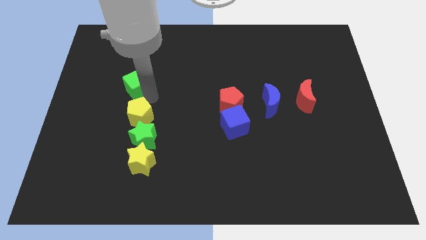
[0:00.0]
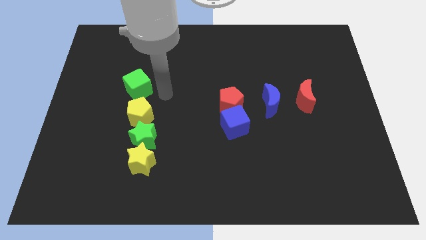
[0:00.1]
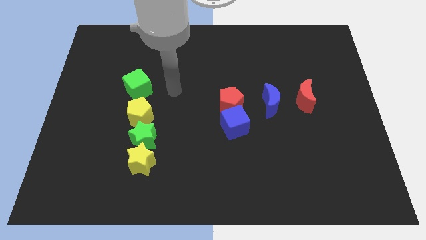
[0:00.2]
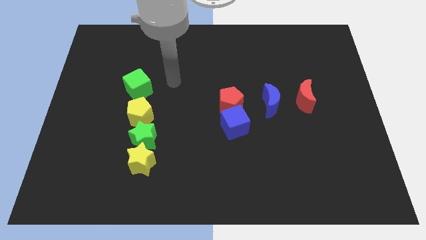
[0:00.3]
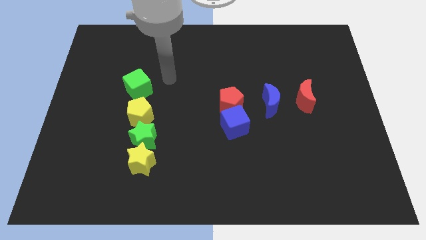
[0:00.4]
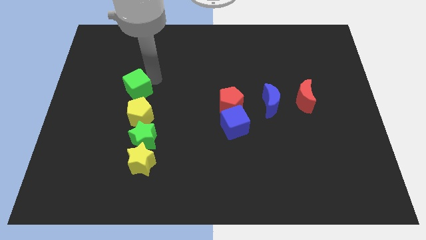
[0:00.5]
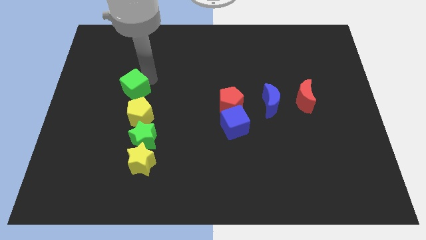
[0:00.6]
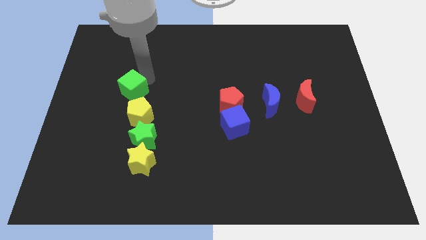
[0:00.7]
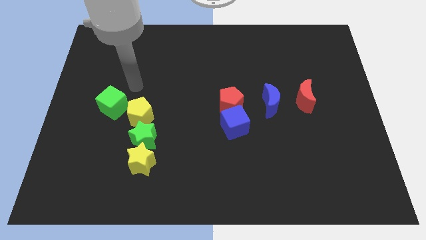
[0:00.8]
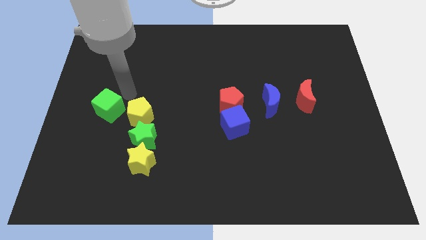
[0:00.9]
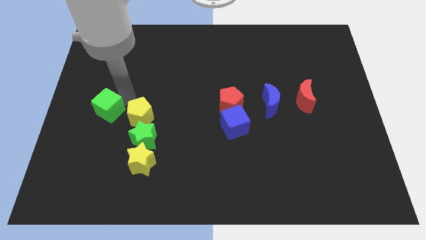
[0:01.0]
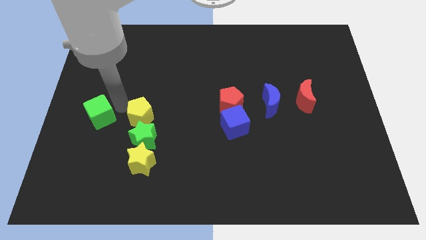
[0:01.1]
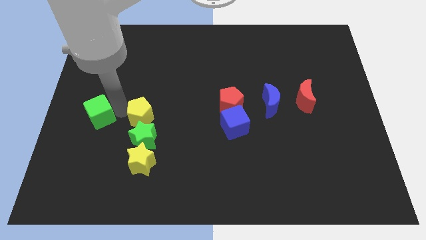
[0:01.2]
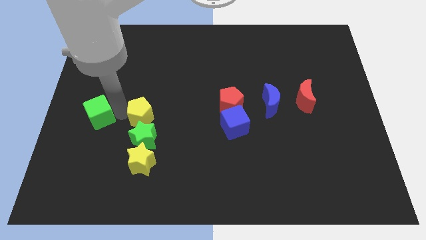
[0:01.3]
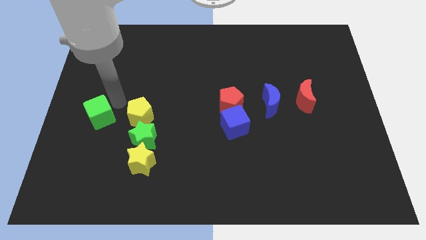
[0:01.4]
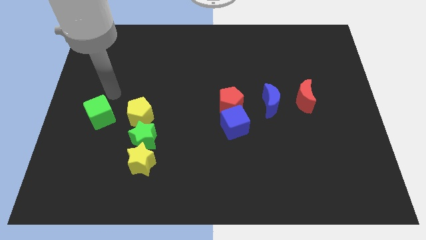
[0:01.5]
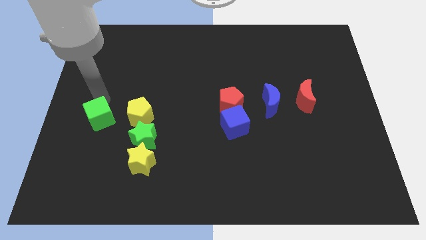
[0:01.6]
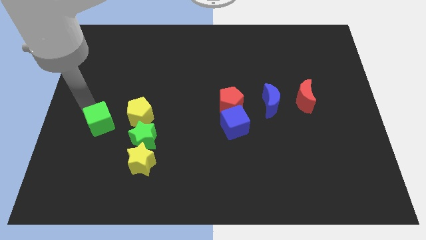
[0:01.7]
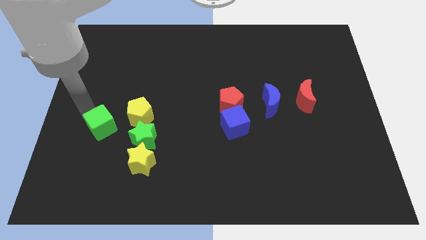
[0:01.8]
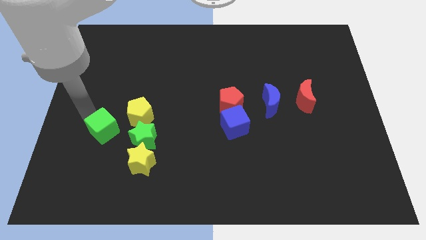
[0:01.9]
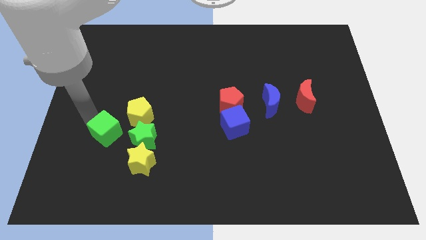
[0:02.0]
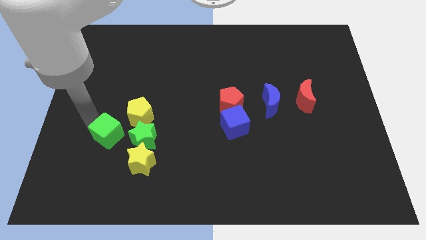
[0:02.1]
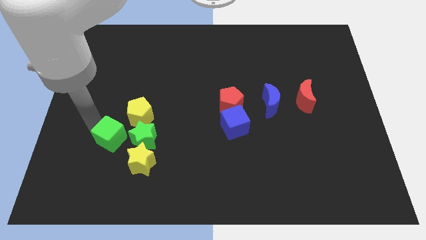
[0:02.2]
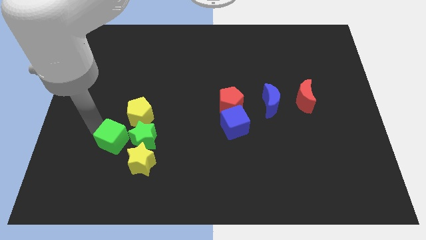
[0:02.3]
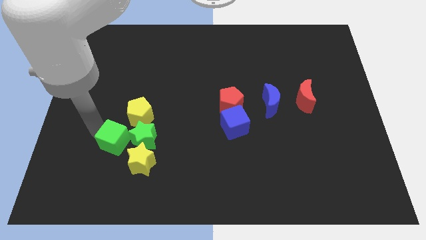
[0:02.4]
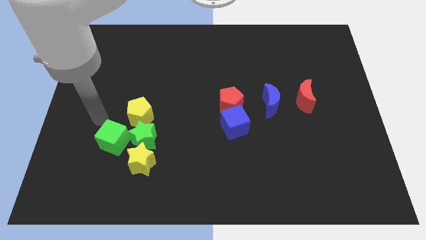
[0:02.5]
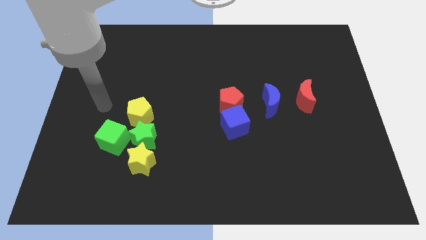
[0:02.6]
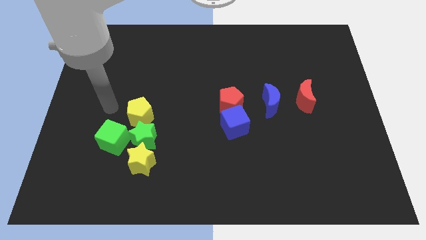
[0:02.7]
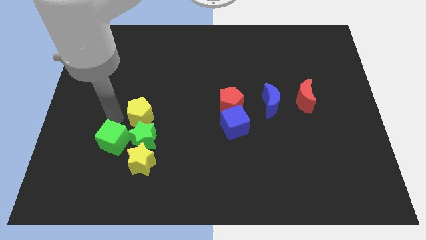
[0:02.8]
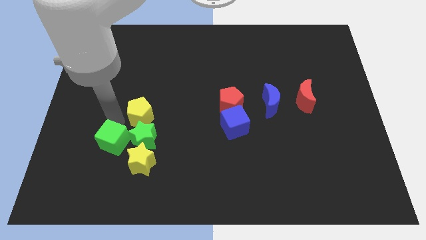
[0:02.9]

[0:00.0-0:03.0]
move the green cube to the left of green star

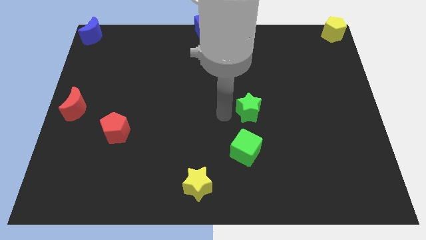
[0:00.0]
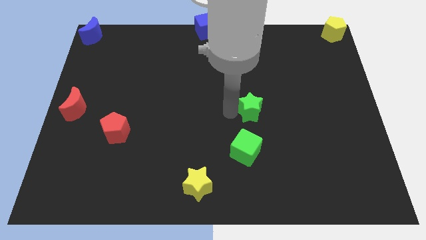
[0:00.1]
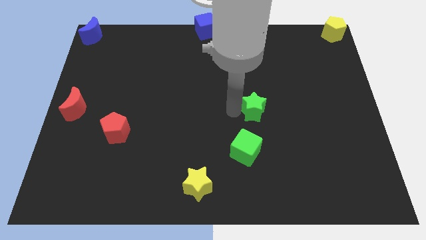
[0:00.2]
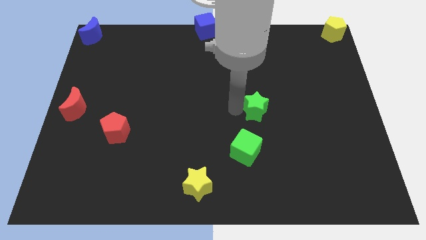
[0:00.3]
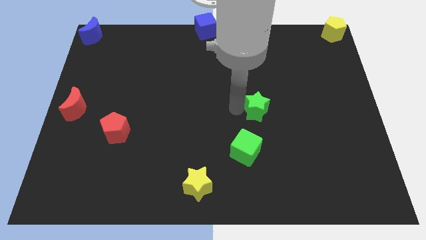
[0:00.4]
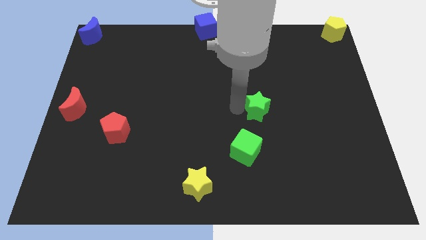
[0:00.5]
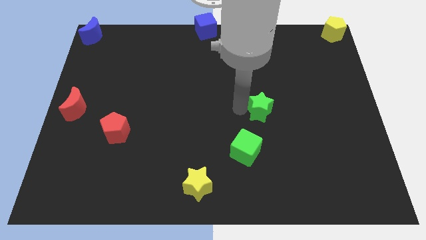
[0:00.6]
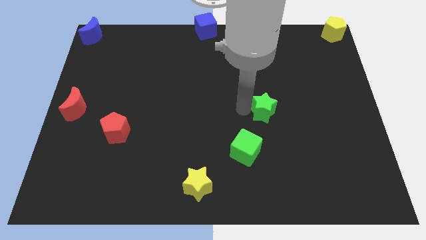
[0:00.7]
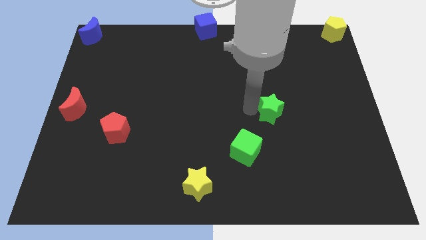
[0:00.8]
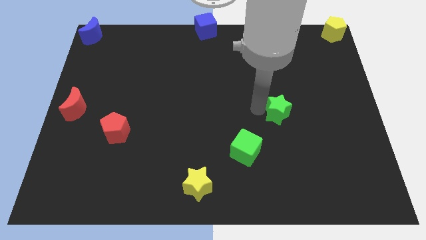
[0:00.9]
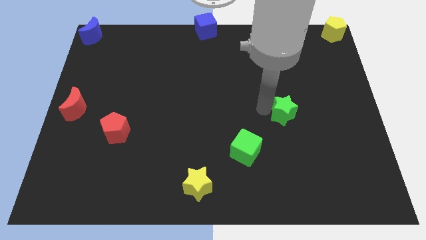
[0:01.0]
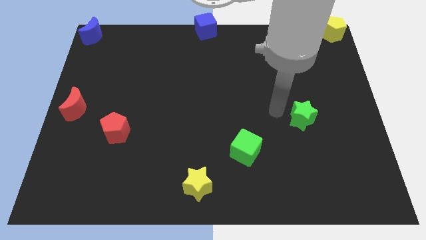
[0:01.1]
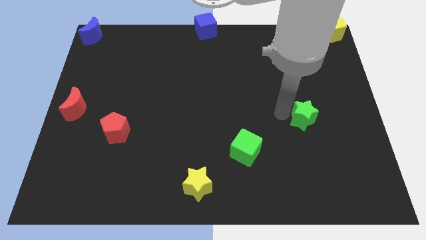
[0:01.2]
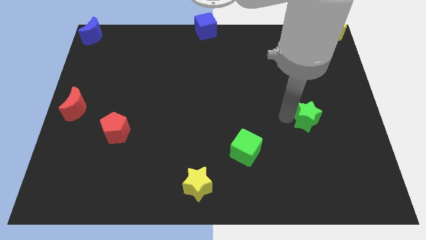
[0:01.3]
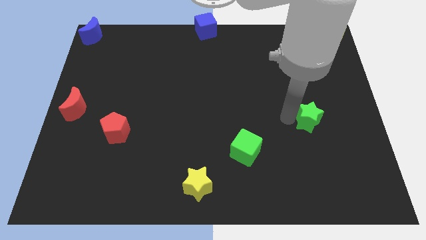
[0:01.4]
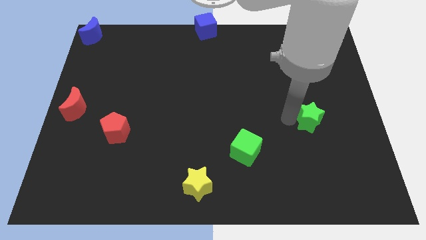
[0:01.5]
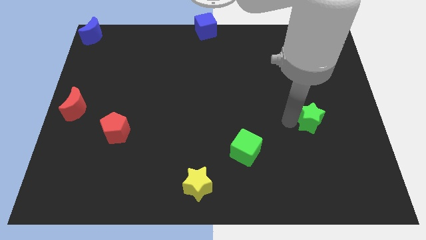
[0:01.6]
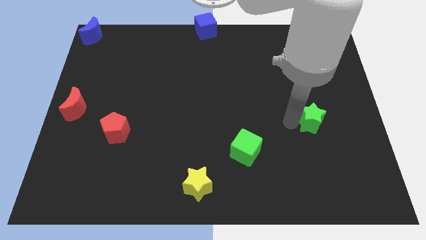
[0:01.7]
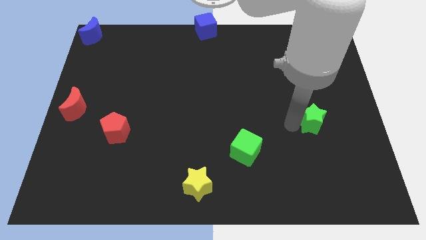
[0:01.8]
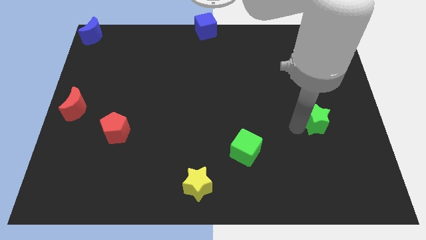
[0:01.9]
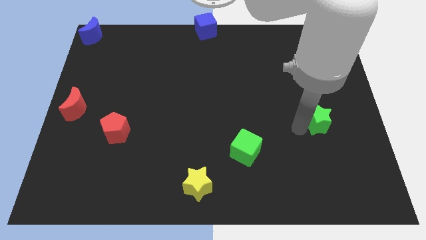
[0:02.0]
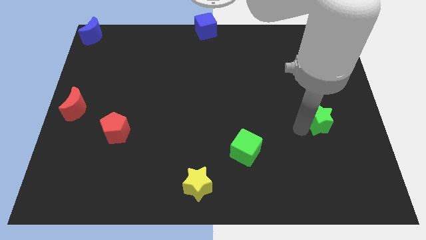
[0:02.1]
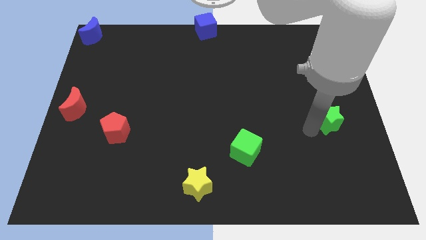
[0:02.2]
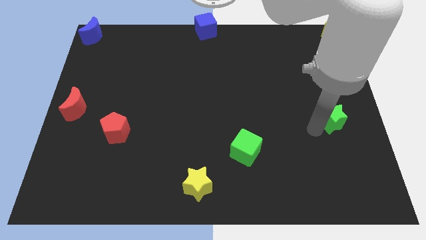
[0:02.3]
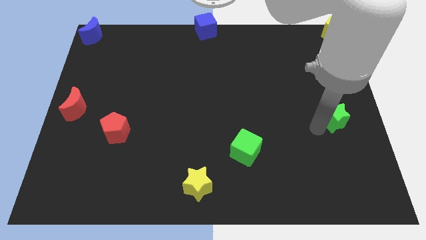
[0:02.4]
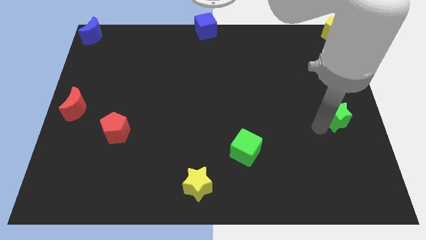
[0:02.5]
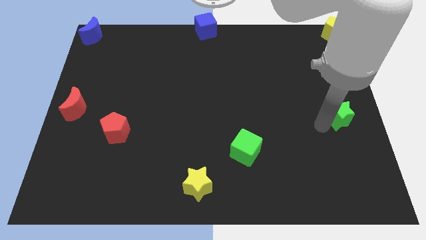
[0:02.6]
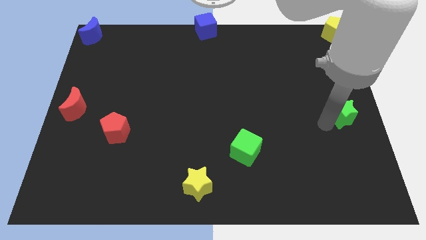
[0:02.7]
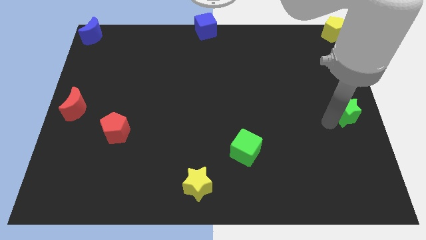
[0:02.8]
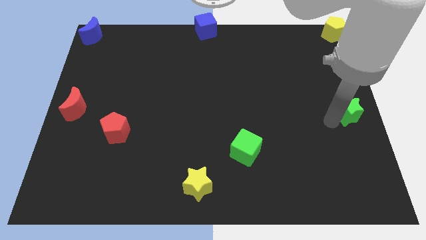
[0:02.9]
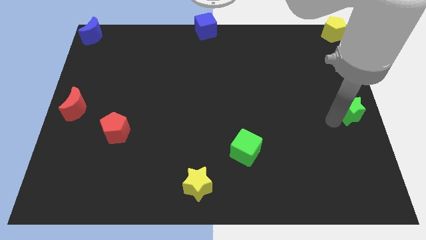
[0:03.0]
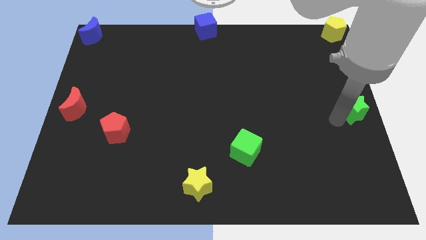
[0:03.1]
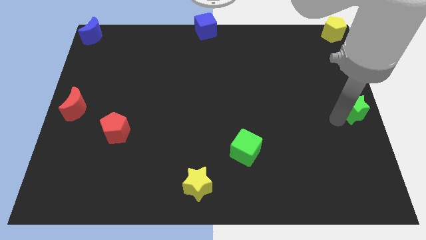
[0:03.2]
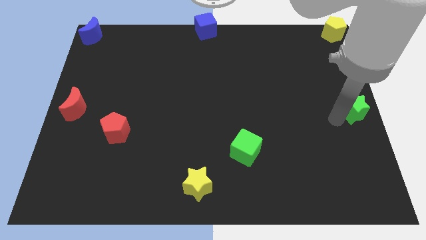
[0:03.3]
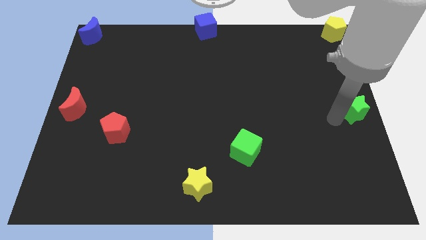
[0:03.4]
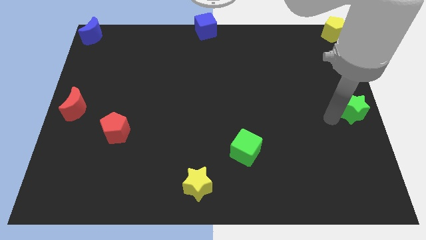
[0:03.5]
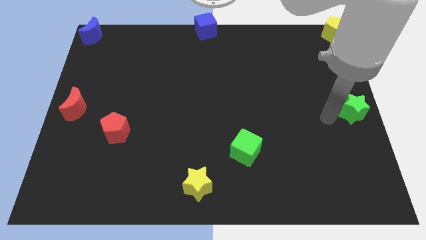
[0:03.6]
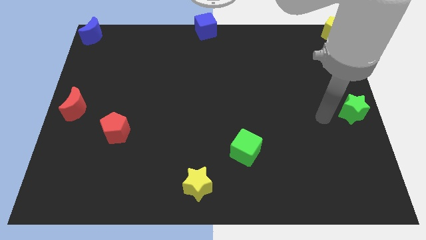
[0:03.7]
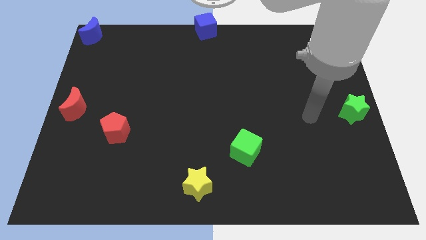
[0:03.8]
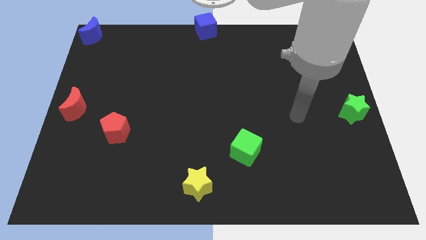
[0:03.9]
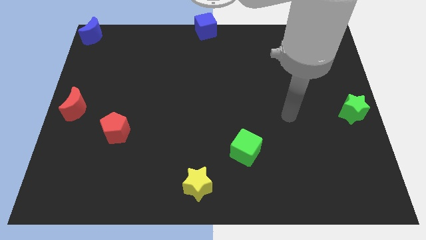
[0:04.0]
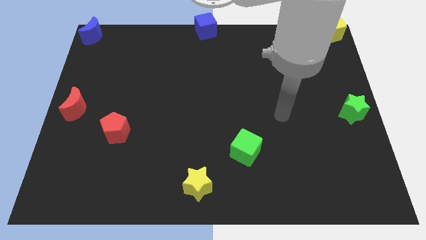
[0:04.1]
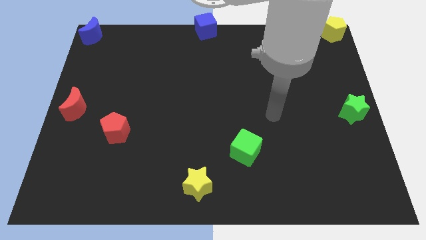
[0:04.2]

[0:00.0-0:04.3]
move the green star to the center right of the board

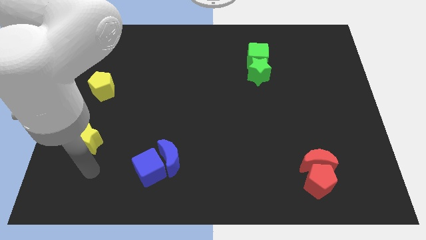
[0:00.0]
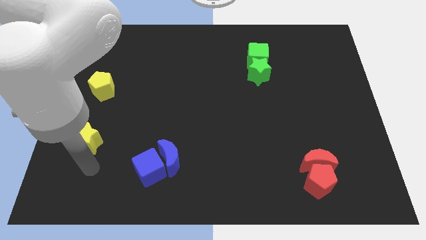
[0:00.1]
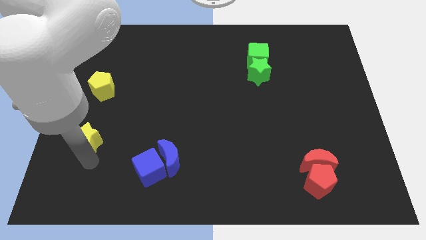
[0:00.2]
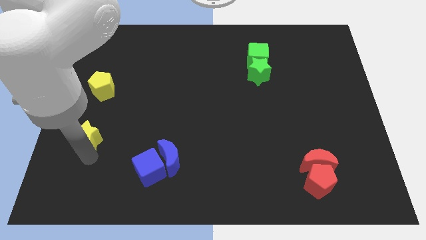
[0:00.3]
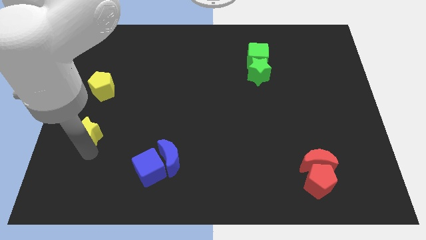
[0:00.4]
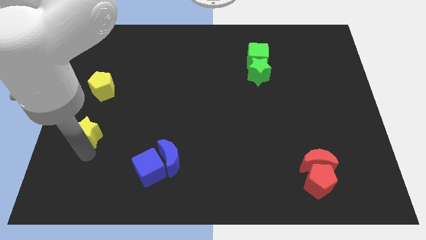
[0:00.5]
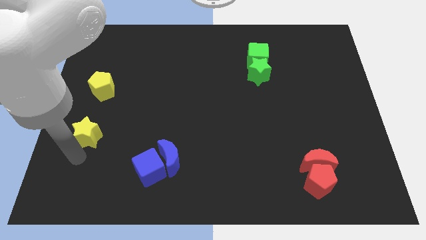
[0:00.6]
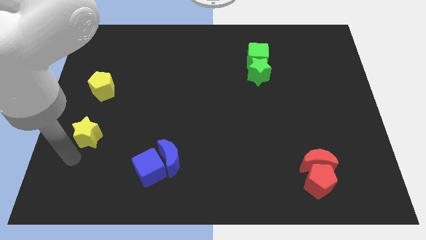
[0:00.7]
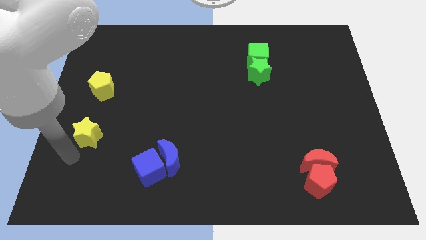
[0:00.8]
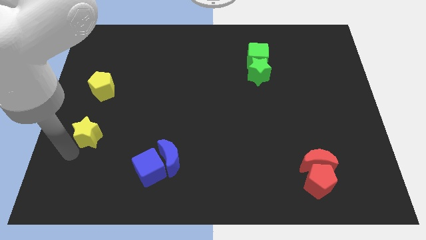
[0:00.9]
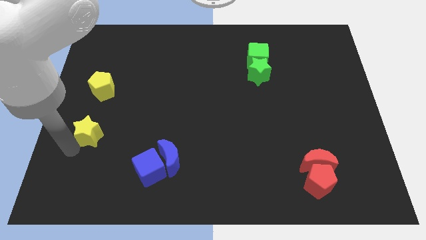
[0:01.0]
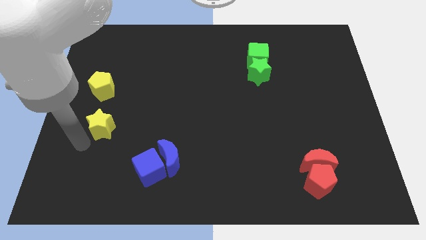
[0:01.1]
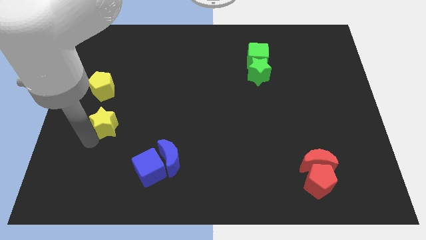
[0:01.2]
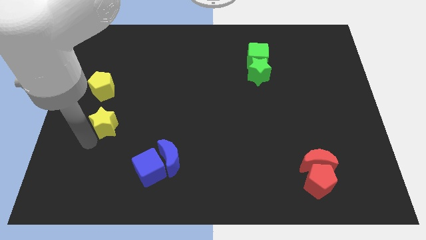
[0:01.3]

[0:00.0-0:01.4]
place the yellow star diagonally below the yellow pentagon

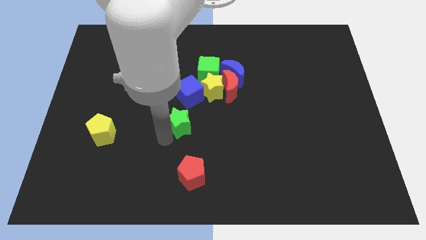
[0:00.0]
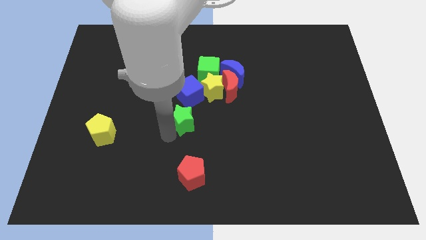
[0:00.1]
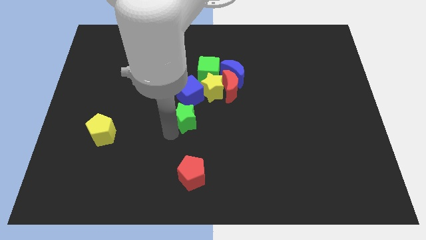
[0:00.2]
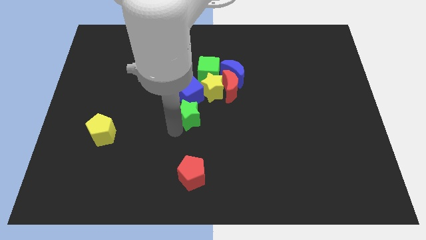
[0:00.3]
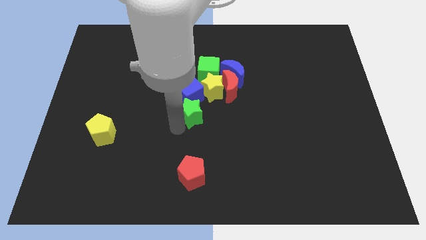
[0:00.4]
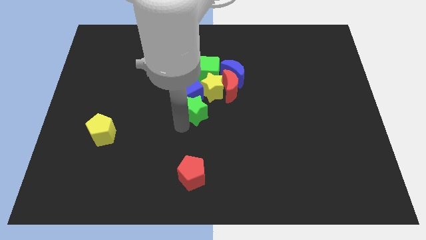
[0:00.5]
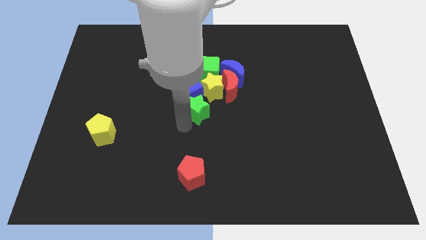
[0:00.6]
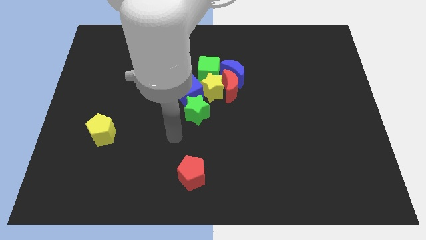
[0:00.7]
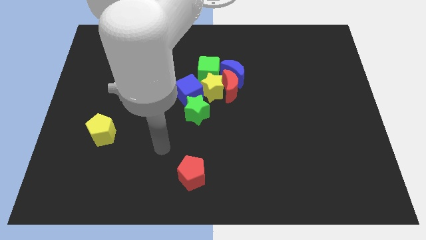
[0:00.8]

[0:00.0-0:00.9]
move the green star into the group of blocks
